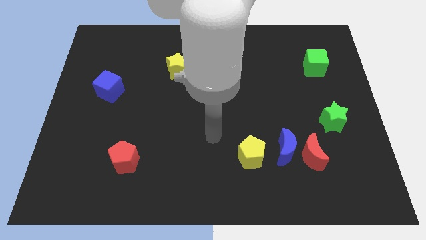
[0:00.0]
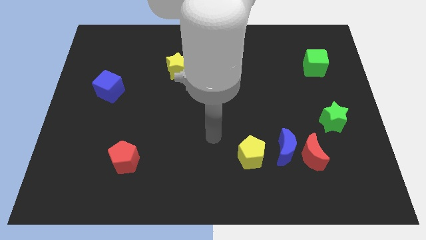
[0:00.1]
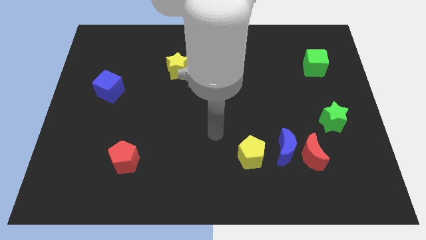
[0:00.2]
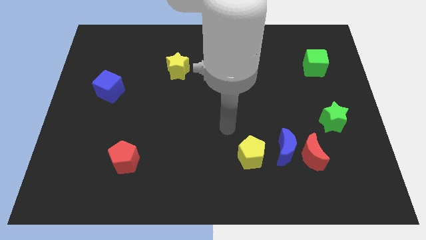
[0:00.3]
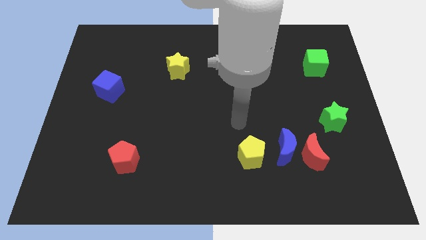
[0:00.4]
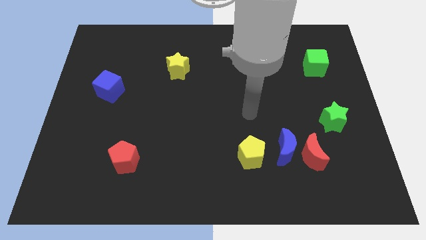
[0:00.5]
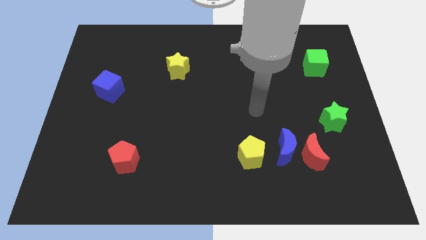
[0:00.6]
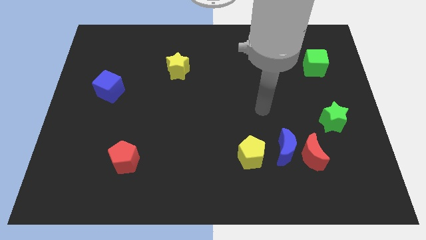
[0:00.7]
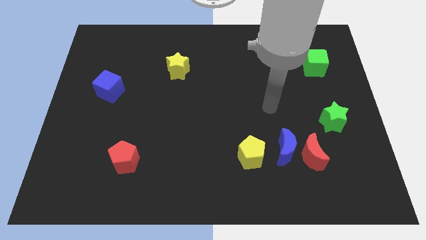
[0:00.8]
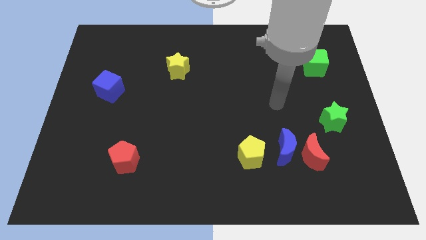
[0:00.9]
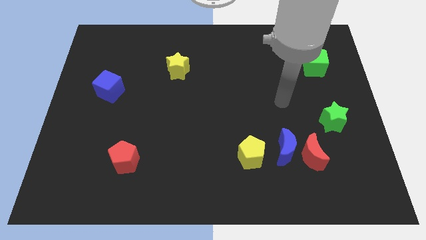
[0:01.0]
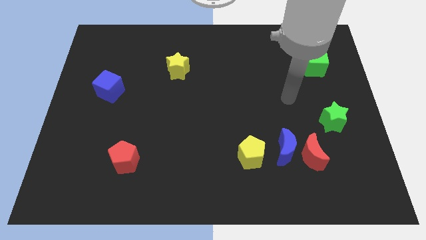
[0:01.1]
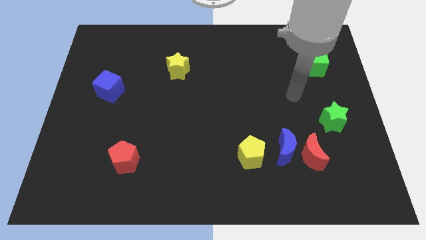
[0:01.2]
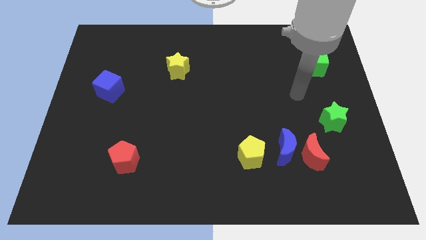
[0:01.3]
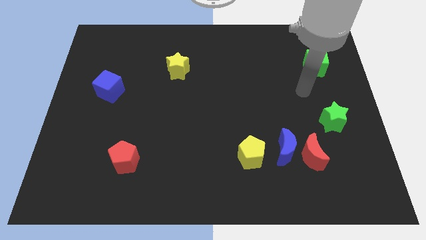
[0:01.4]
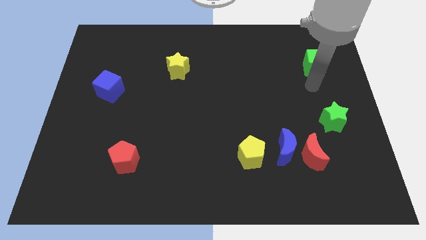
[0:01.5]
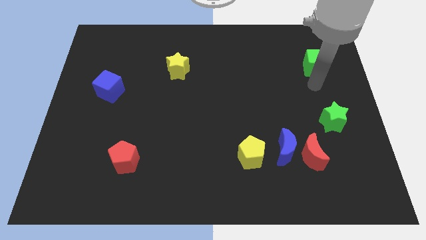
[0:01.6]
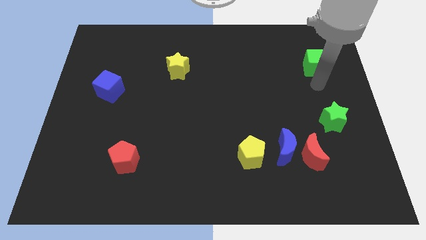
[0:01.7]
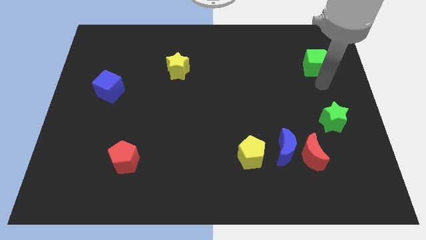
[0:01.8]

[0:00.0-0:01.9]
place your hand under green cube

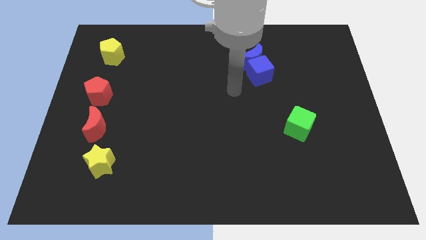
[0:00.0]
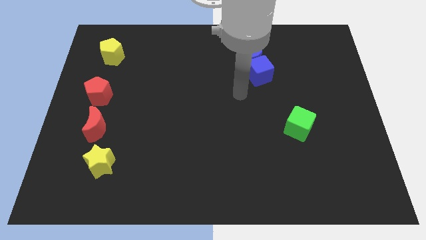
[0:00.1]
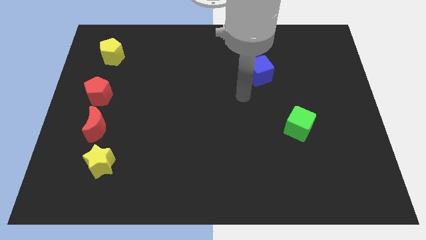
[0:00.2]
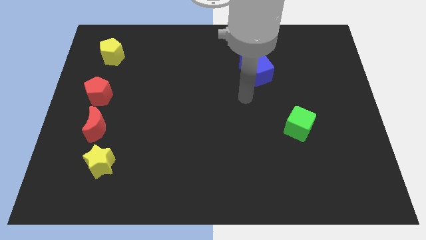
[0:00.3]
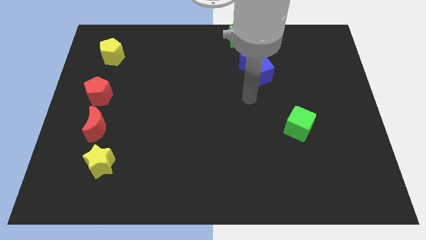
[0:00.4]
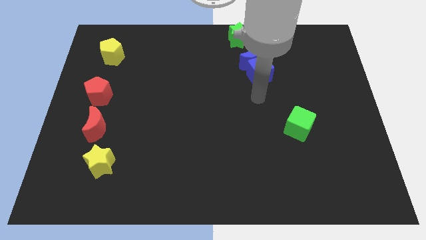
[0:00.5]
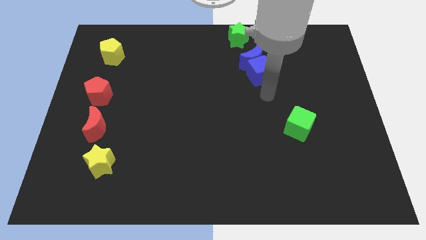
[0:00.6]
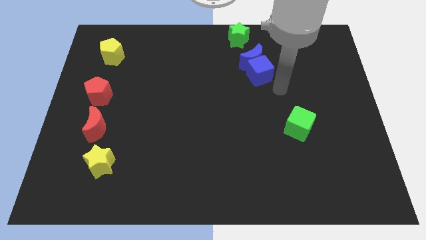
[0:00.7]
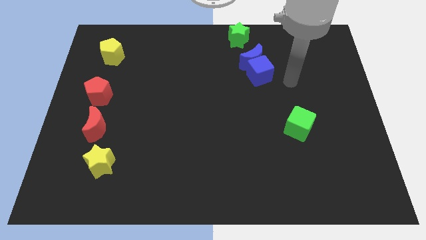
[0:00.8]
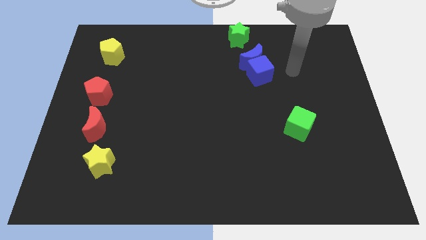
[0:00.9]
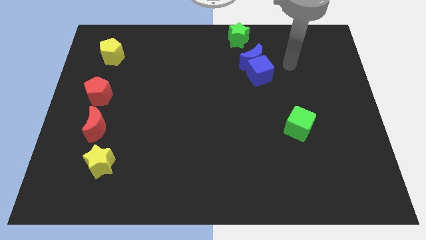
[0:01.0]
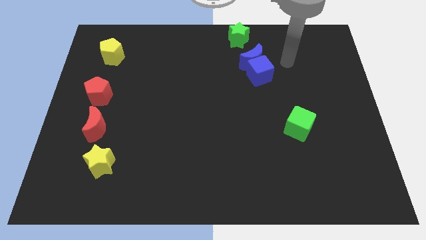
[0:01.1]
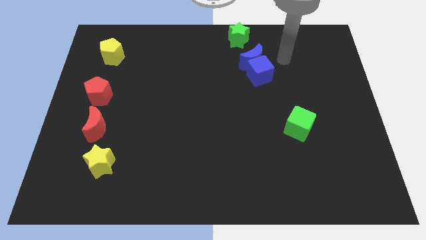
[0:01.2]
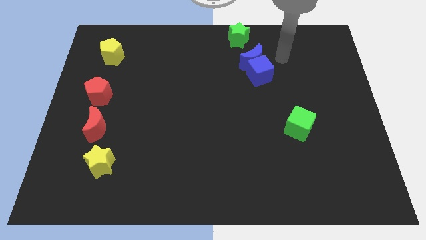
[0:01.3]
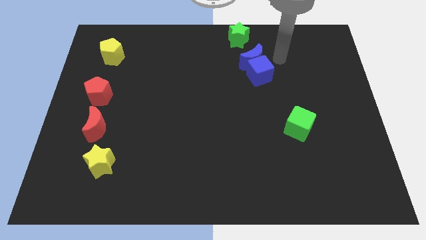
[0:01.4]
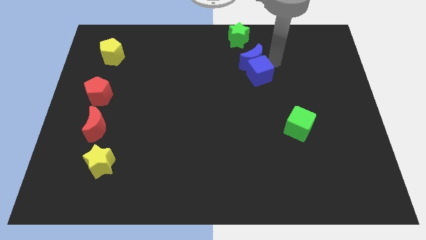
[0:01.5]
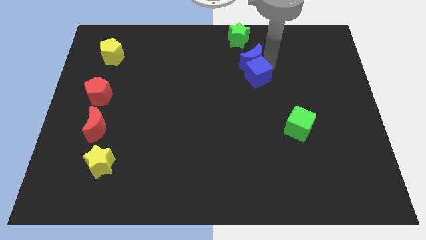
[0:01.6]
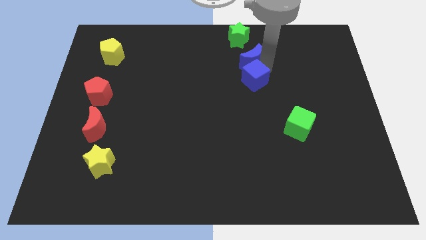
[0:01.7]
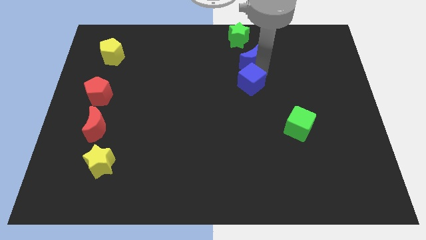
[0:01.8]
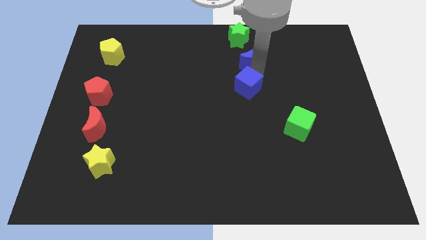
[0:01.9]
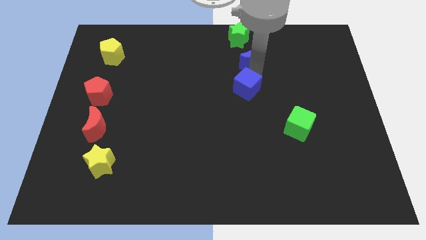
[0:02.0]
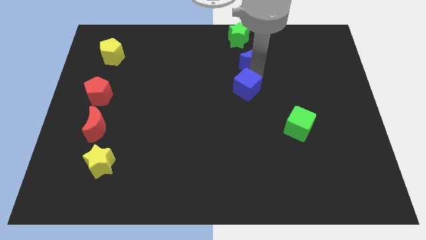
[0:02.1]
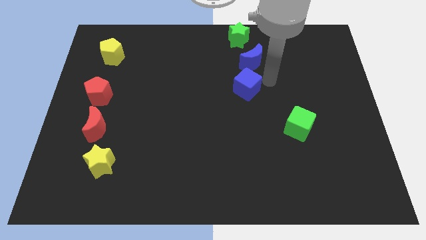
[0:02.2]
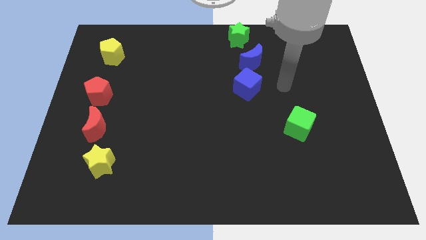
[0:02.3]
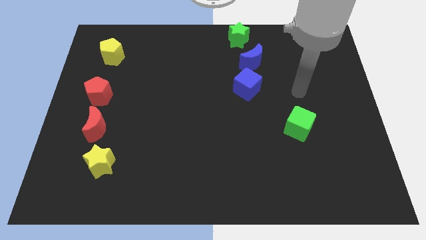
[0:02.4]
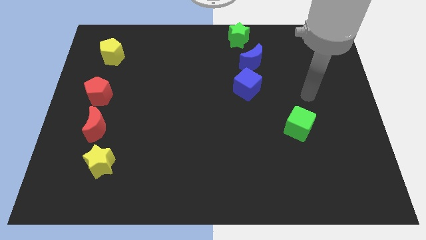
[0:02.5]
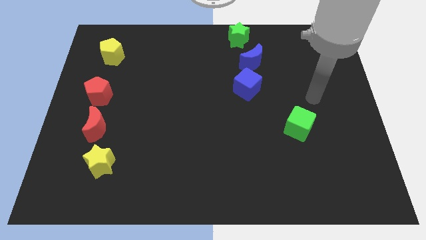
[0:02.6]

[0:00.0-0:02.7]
separate the blue cube from blue moon

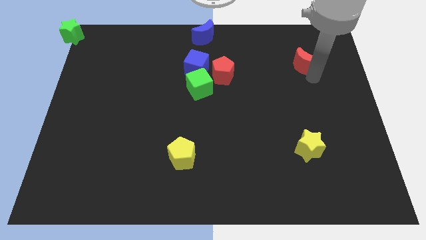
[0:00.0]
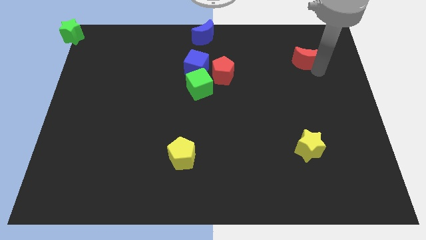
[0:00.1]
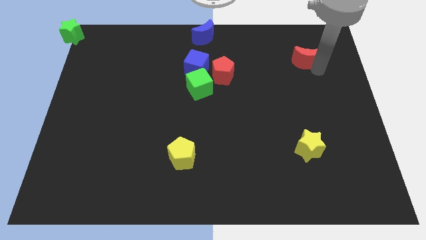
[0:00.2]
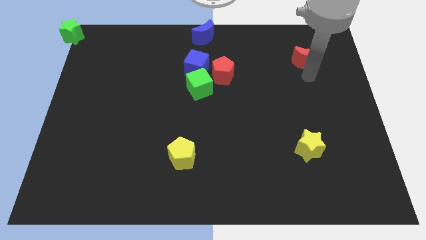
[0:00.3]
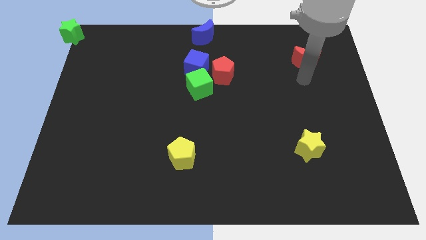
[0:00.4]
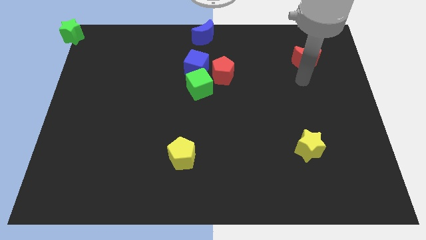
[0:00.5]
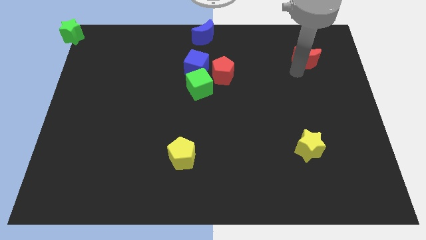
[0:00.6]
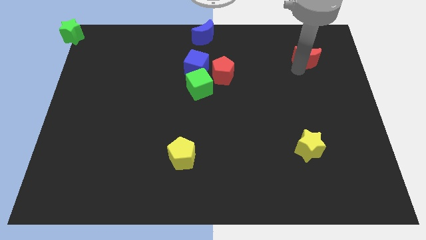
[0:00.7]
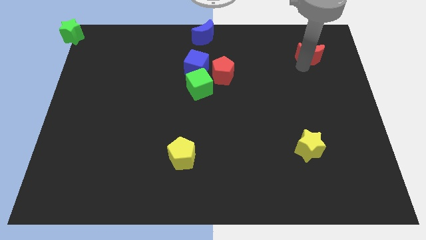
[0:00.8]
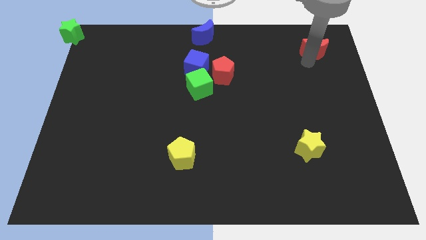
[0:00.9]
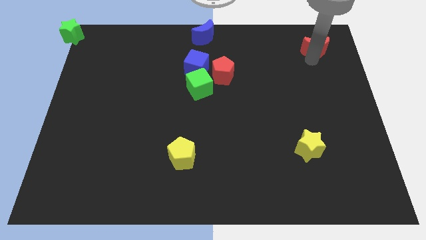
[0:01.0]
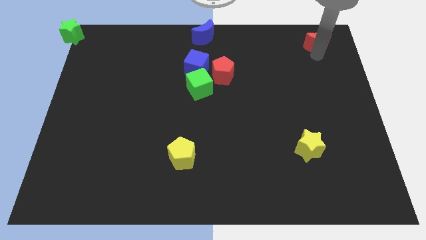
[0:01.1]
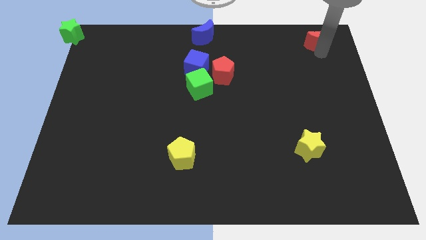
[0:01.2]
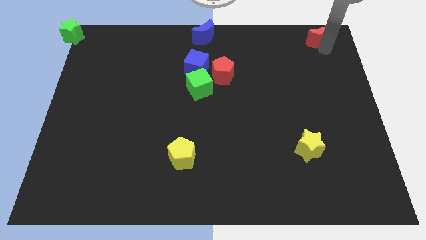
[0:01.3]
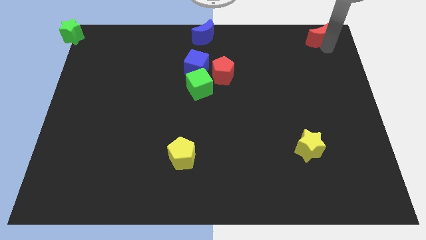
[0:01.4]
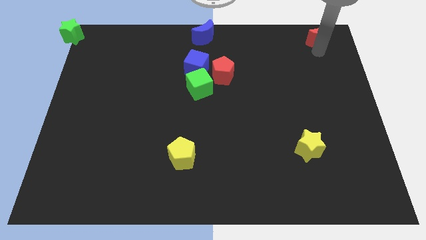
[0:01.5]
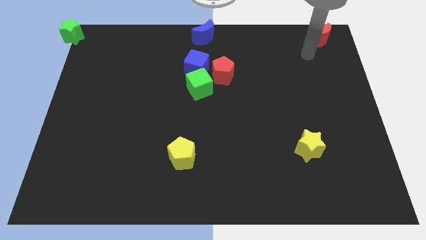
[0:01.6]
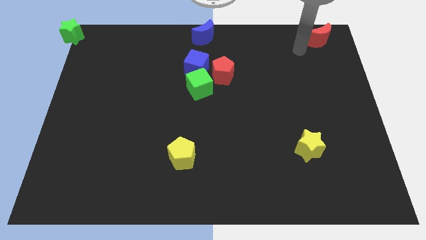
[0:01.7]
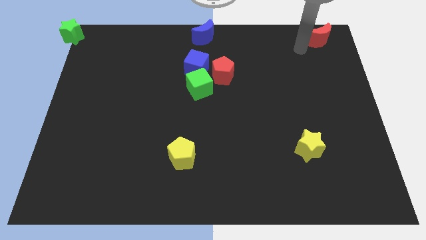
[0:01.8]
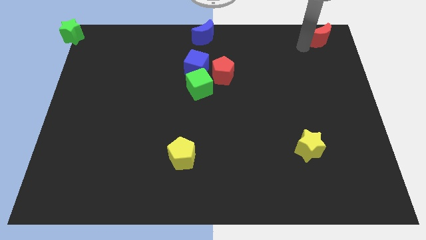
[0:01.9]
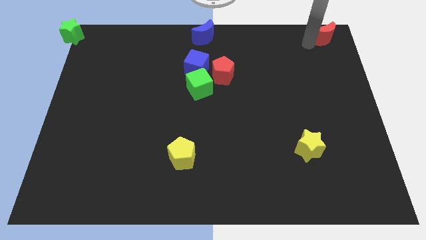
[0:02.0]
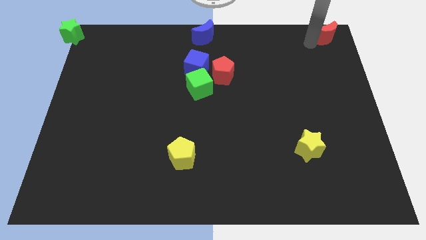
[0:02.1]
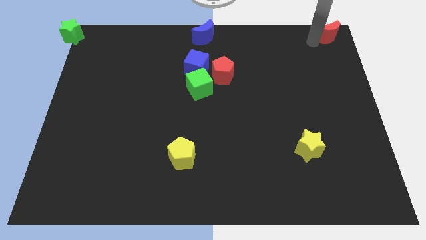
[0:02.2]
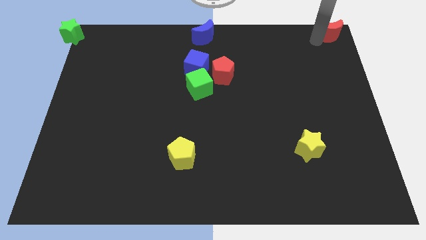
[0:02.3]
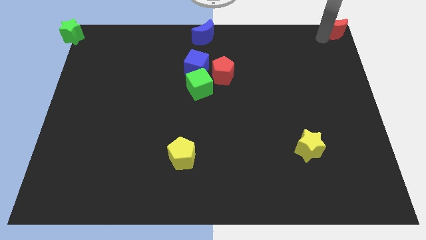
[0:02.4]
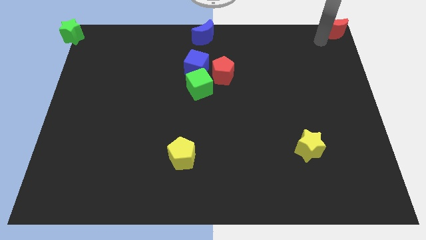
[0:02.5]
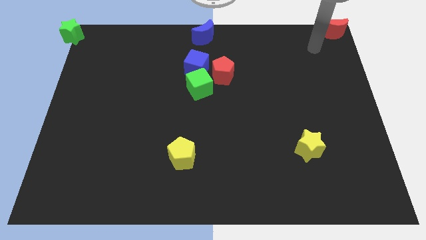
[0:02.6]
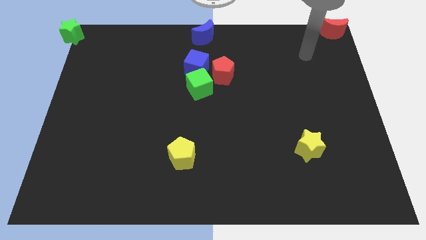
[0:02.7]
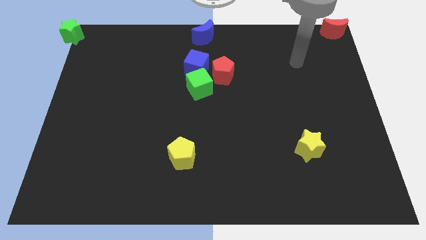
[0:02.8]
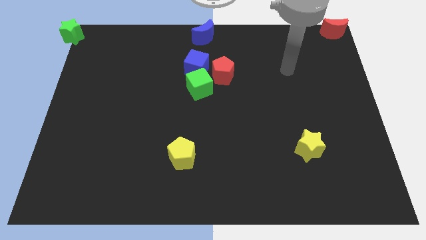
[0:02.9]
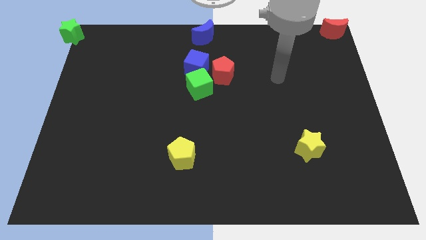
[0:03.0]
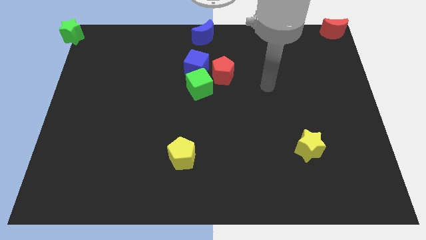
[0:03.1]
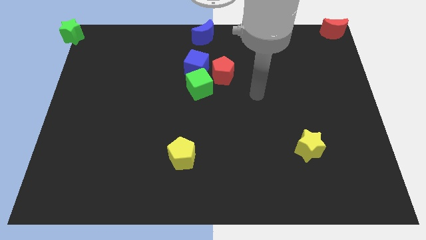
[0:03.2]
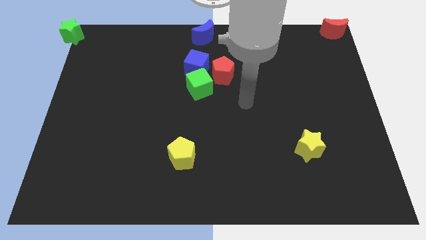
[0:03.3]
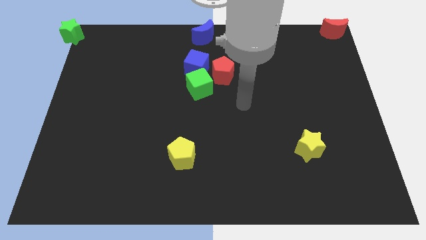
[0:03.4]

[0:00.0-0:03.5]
slightly push the red moon to the top right of the corner

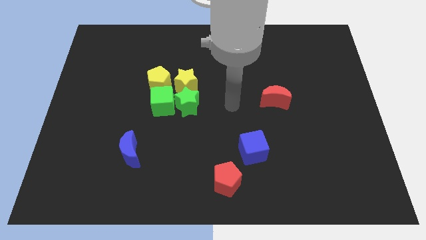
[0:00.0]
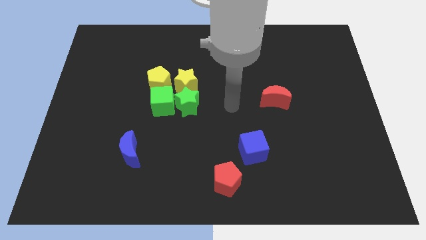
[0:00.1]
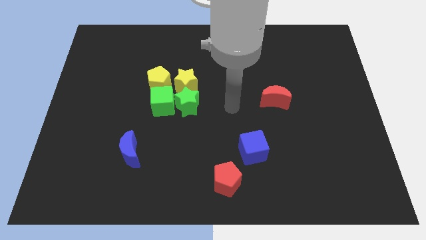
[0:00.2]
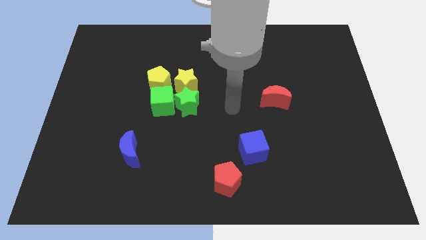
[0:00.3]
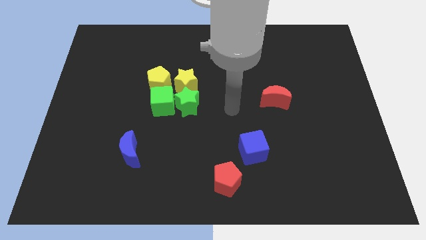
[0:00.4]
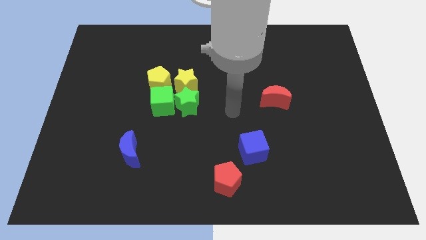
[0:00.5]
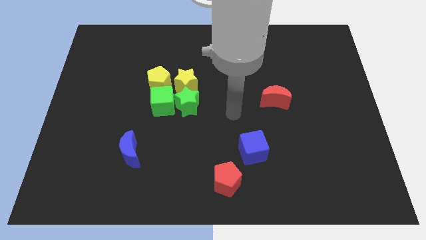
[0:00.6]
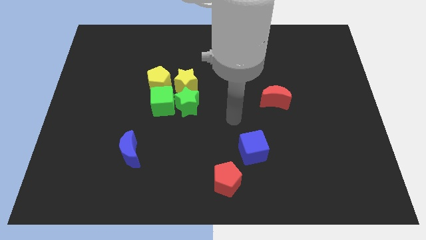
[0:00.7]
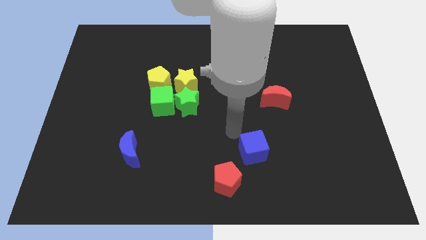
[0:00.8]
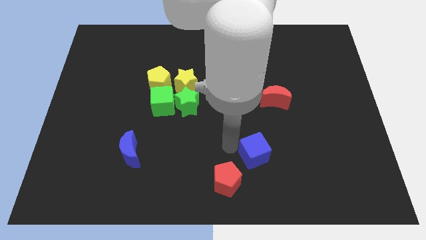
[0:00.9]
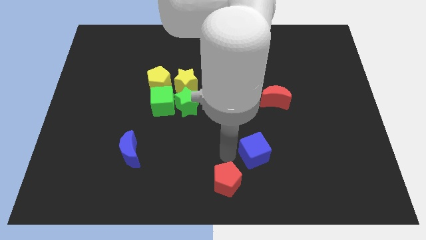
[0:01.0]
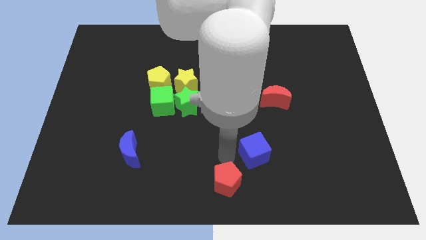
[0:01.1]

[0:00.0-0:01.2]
move your arm towards the red pentagon
